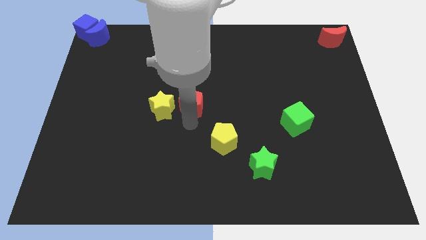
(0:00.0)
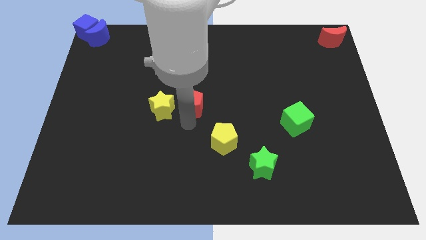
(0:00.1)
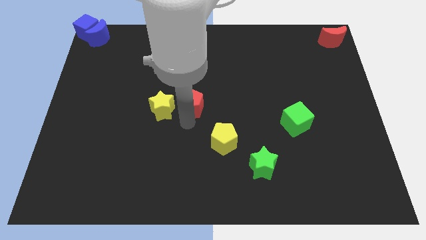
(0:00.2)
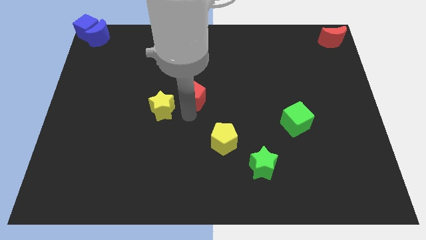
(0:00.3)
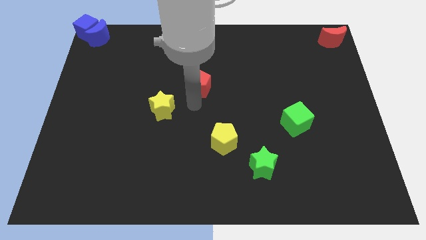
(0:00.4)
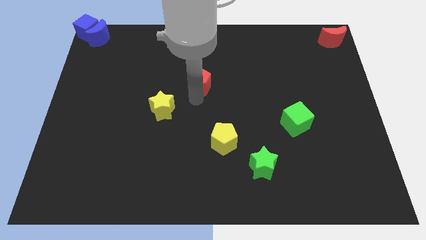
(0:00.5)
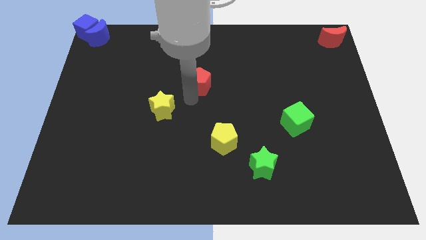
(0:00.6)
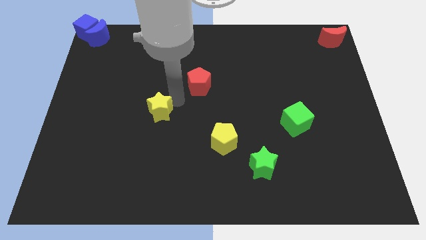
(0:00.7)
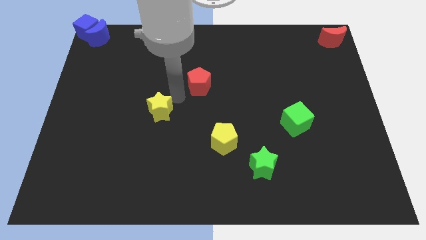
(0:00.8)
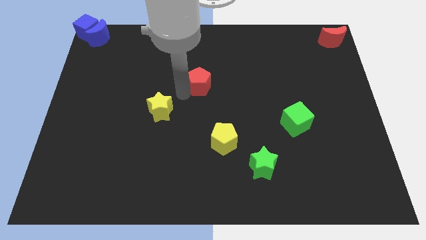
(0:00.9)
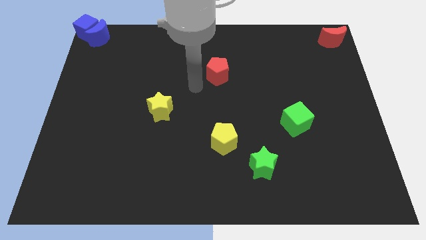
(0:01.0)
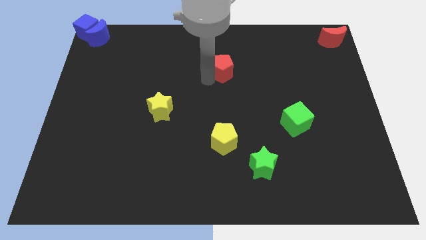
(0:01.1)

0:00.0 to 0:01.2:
move the red pentagon on the top of the yellow pentagon vertically

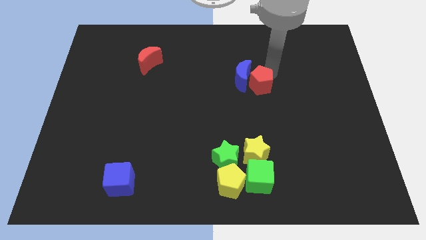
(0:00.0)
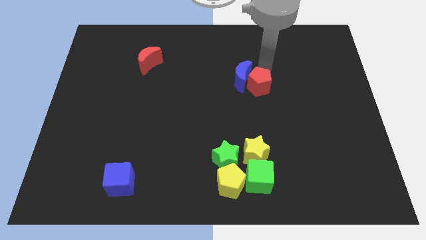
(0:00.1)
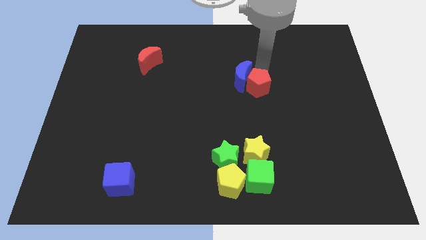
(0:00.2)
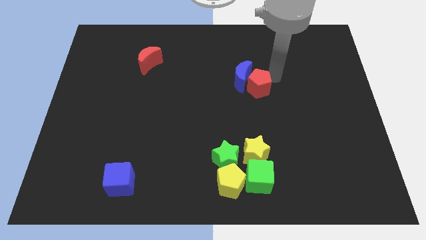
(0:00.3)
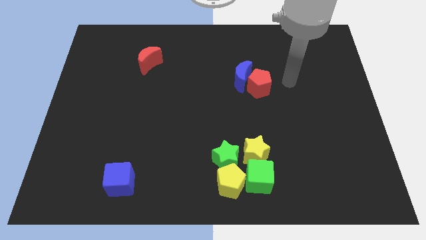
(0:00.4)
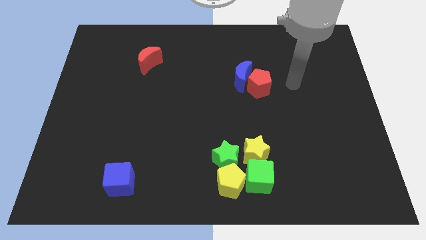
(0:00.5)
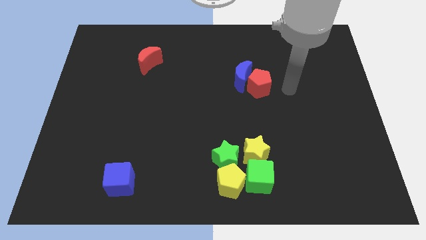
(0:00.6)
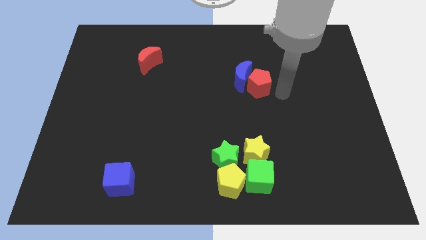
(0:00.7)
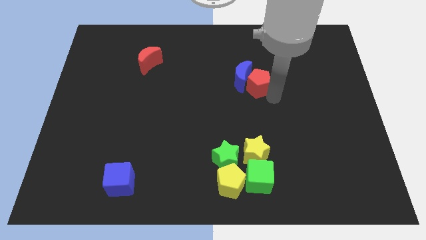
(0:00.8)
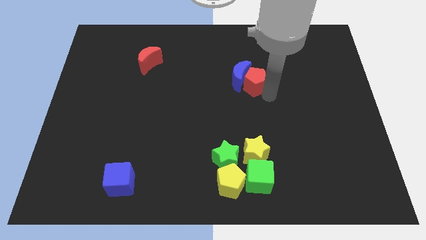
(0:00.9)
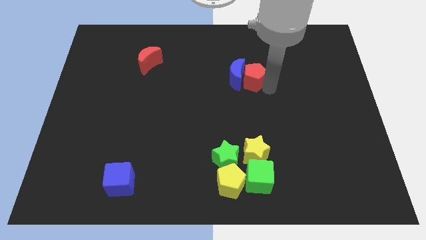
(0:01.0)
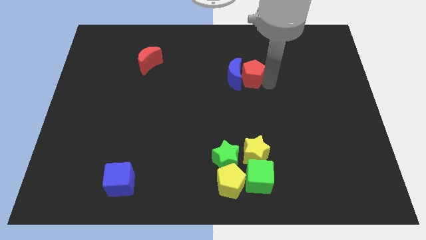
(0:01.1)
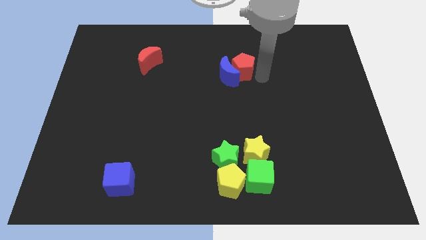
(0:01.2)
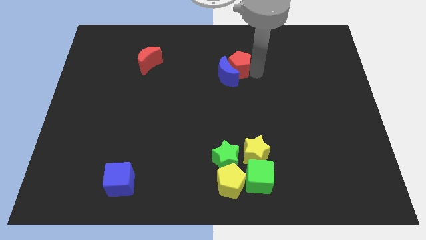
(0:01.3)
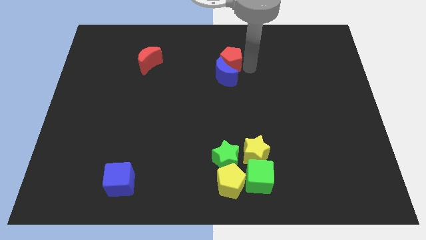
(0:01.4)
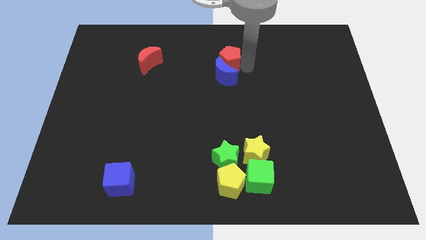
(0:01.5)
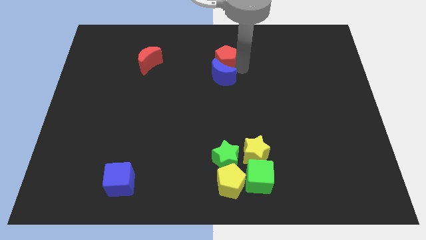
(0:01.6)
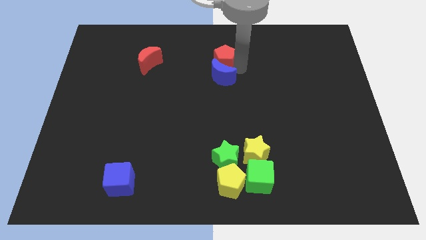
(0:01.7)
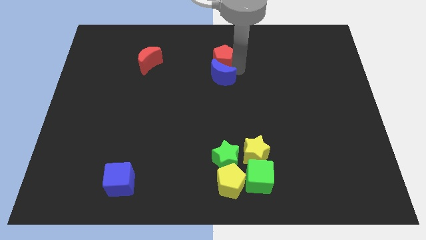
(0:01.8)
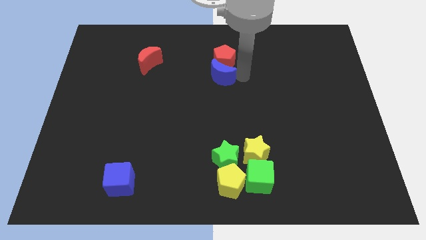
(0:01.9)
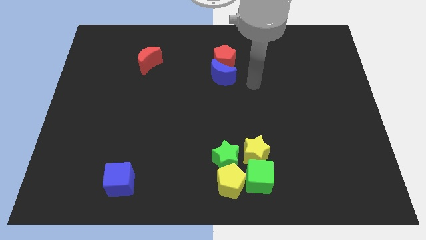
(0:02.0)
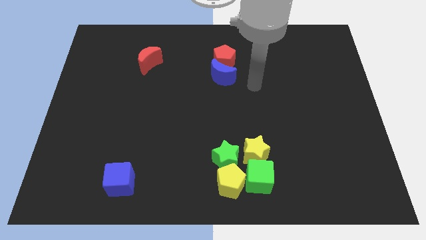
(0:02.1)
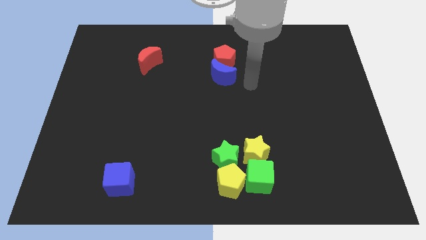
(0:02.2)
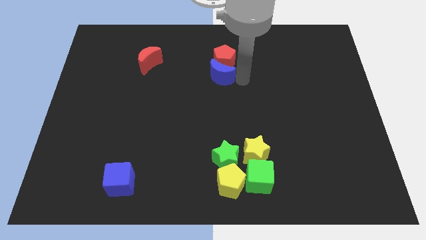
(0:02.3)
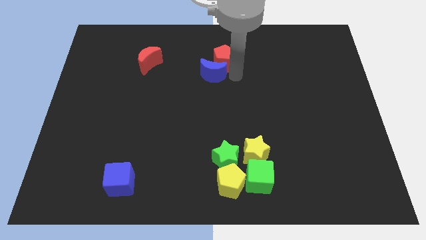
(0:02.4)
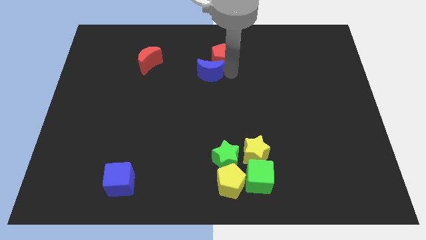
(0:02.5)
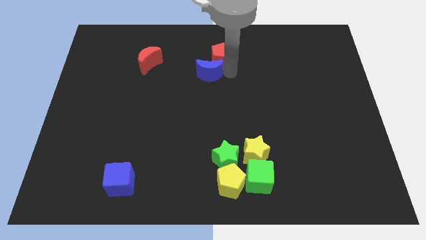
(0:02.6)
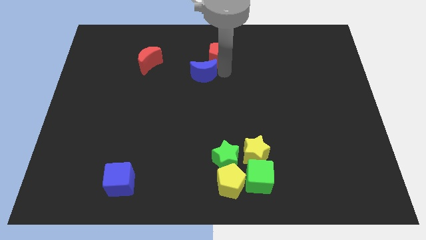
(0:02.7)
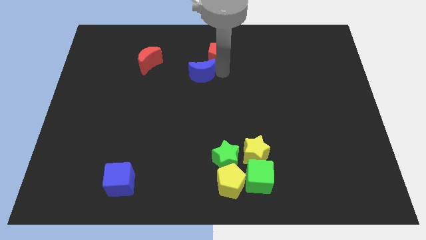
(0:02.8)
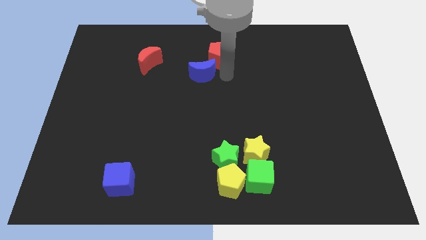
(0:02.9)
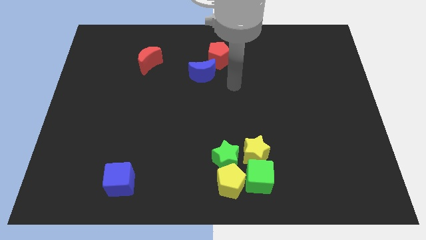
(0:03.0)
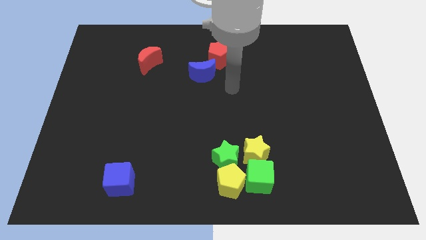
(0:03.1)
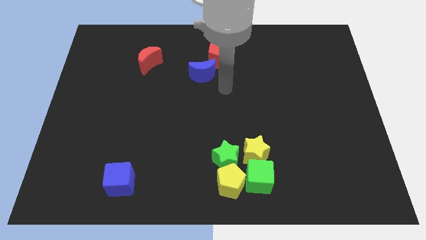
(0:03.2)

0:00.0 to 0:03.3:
slide the red pentagon and blue moon to the top left side of the board

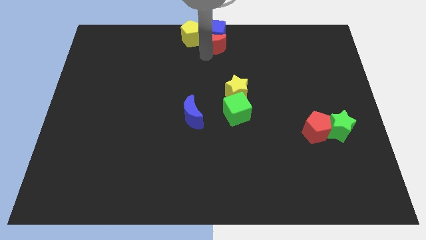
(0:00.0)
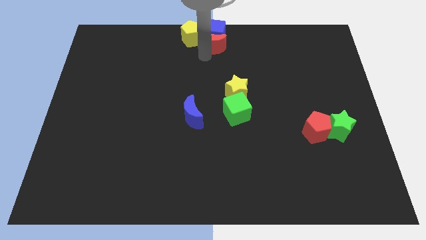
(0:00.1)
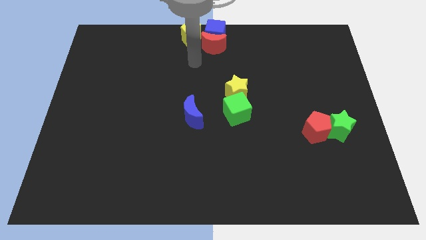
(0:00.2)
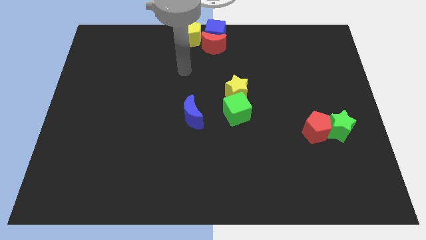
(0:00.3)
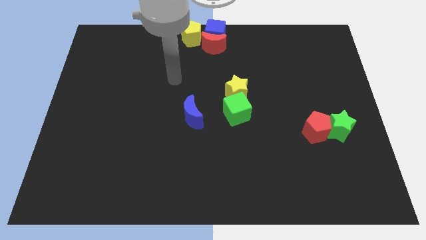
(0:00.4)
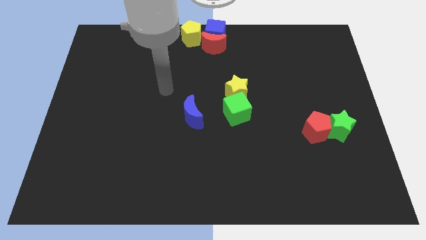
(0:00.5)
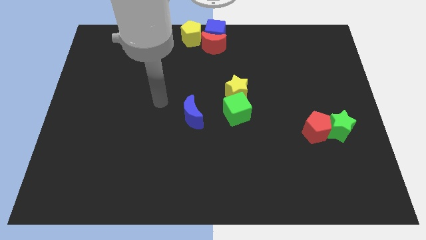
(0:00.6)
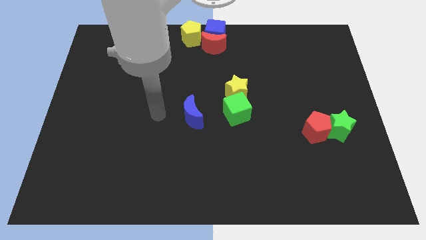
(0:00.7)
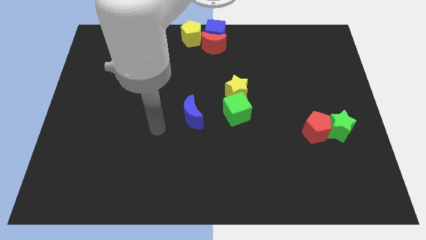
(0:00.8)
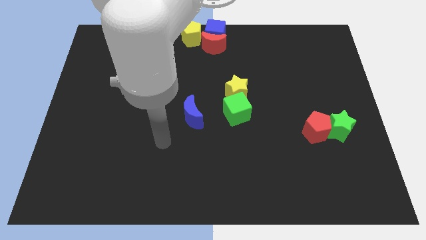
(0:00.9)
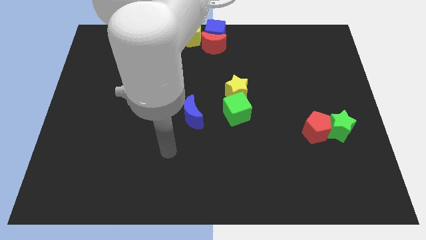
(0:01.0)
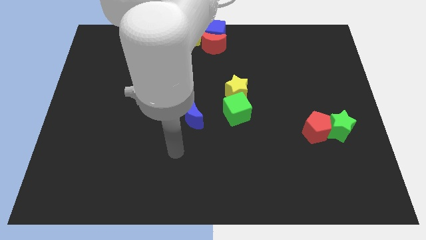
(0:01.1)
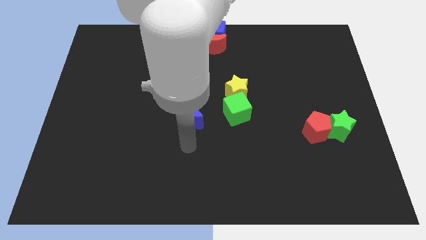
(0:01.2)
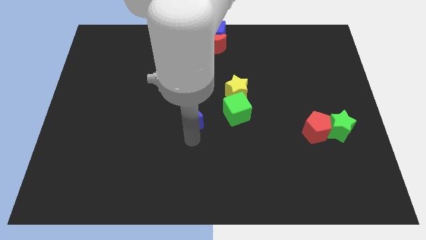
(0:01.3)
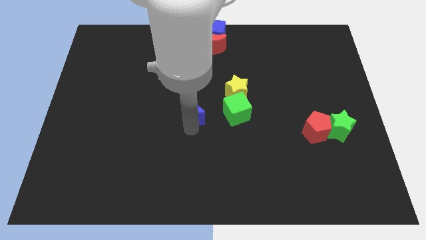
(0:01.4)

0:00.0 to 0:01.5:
move your arm away from the red moon

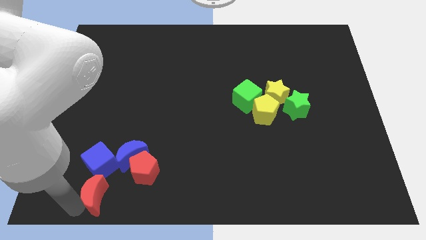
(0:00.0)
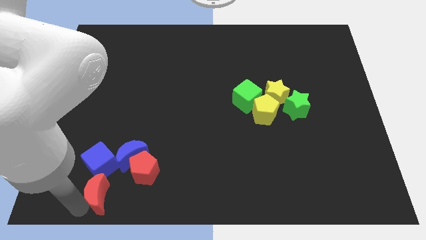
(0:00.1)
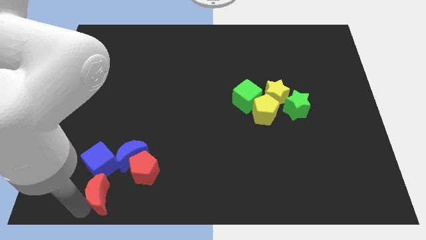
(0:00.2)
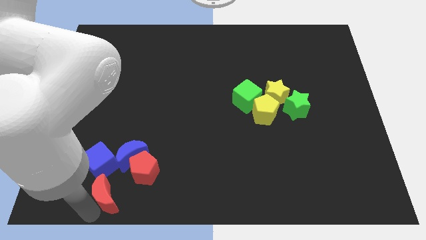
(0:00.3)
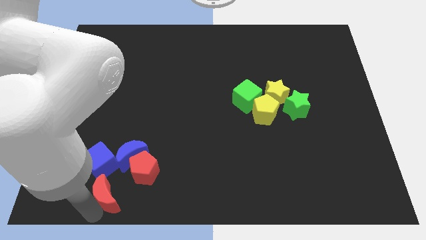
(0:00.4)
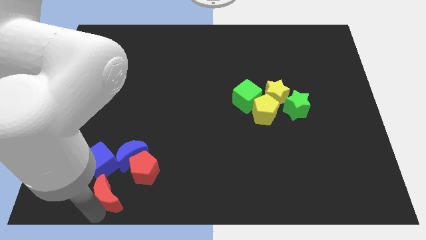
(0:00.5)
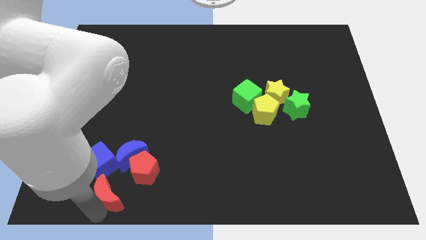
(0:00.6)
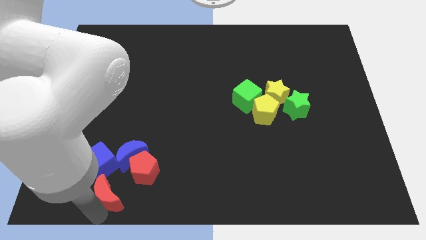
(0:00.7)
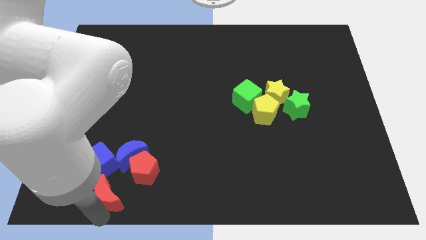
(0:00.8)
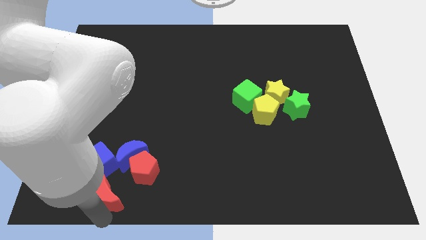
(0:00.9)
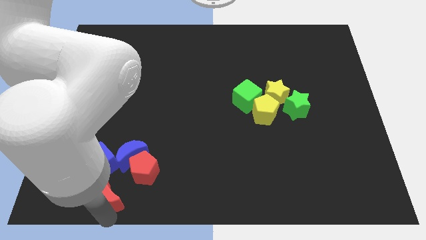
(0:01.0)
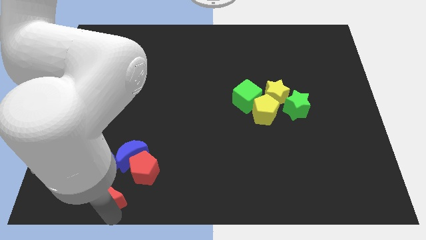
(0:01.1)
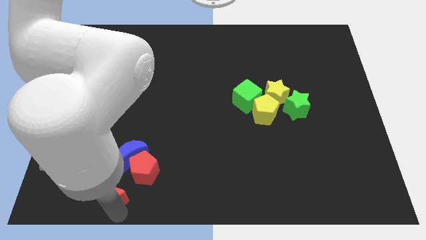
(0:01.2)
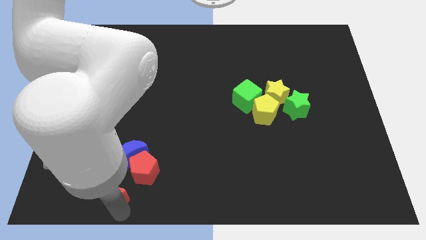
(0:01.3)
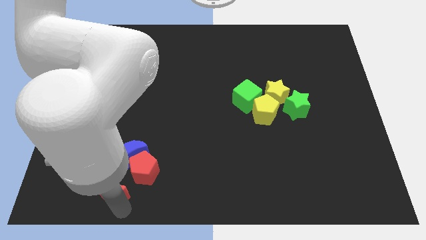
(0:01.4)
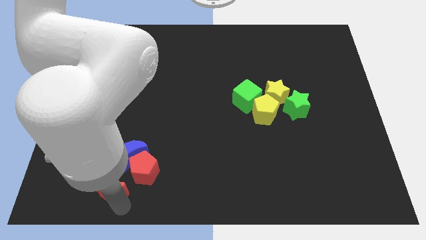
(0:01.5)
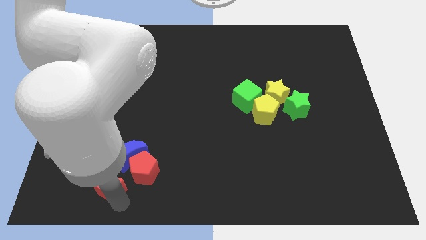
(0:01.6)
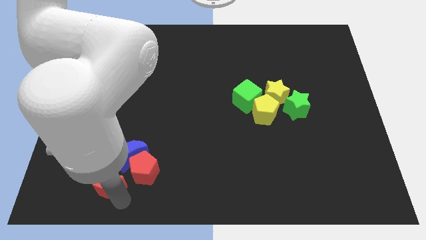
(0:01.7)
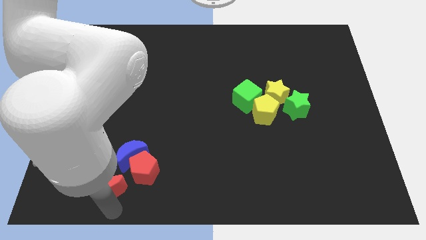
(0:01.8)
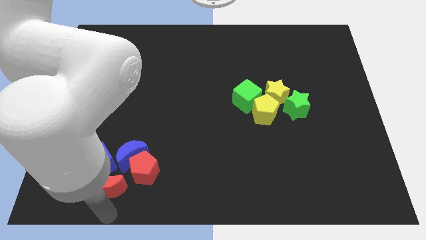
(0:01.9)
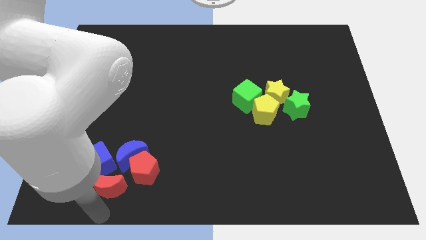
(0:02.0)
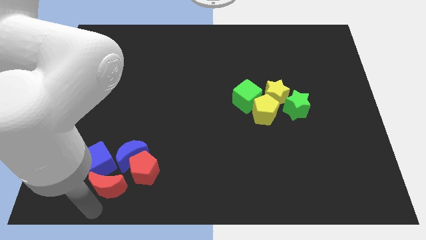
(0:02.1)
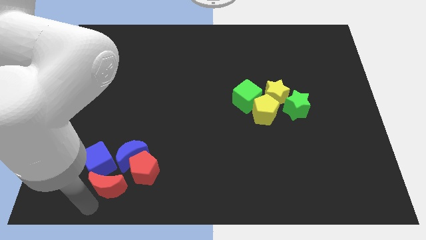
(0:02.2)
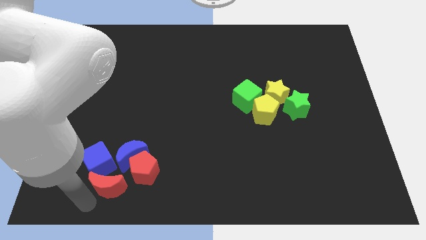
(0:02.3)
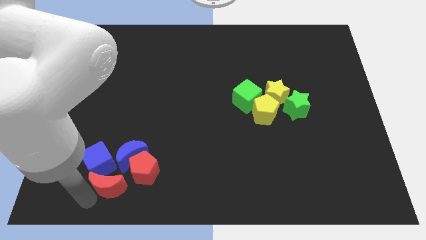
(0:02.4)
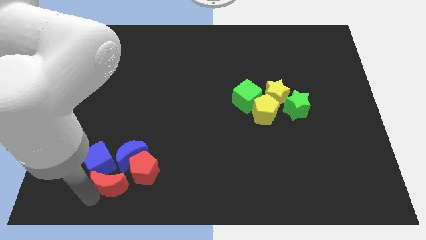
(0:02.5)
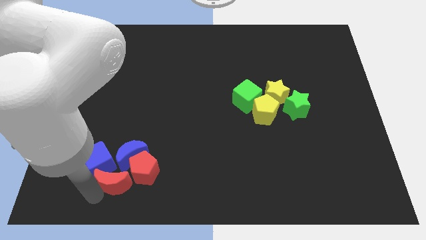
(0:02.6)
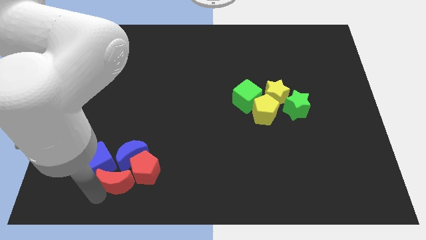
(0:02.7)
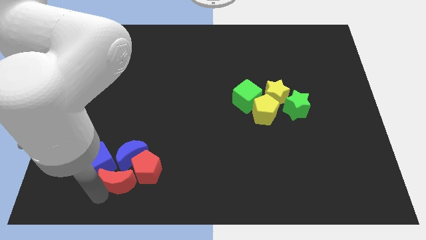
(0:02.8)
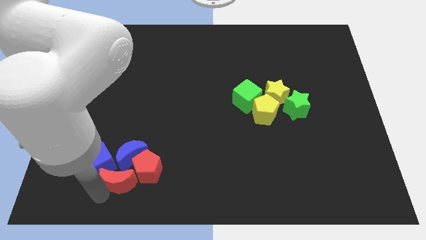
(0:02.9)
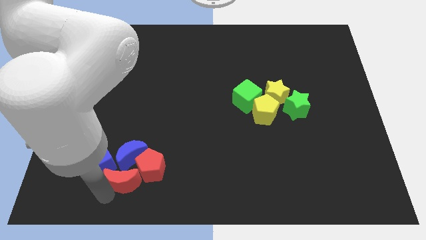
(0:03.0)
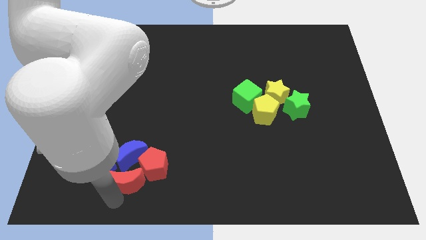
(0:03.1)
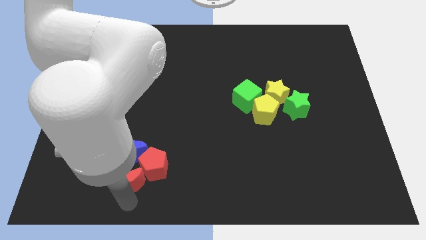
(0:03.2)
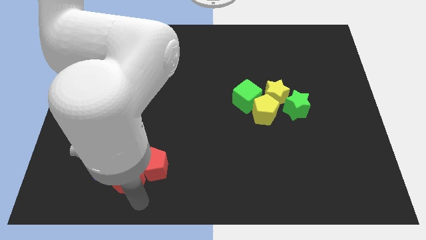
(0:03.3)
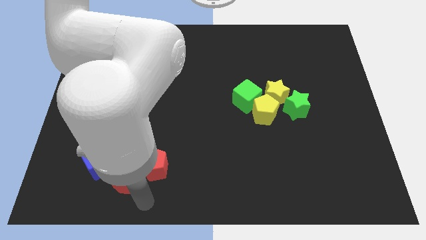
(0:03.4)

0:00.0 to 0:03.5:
put the red moon at the bottom of the group of blue blocks
